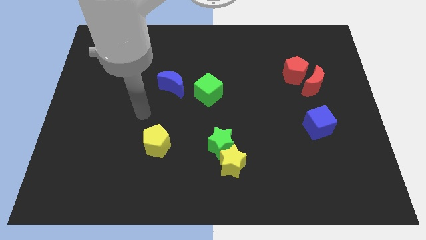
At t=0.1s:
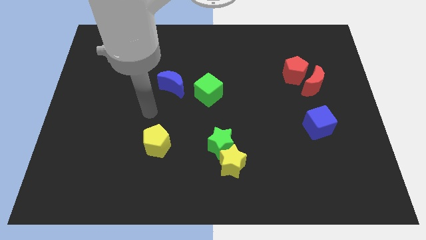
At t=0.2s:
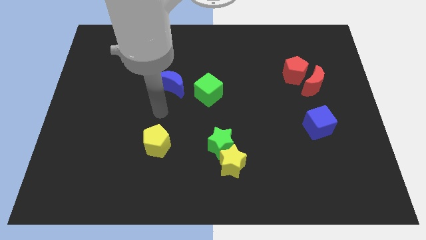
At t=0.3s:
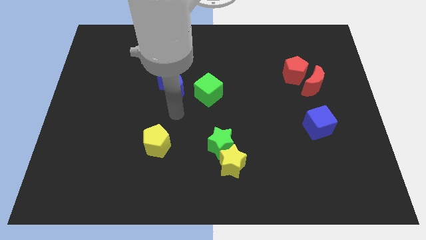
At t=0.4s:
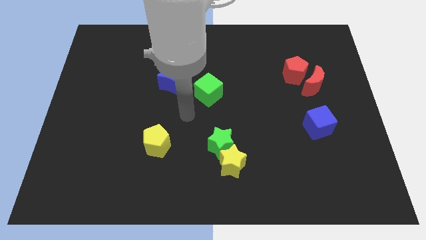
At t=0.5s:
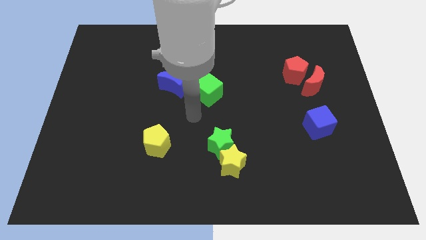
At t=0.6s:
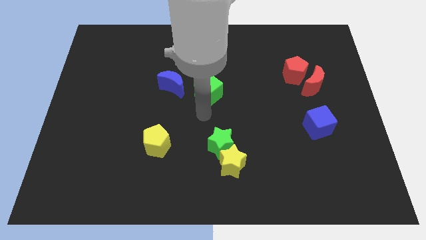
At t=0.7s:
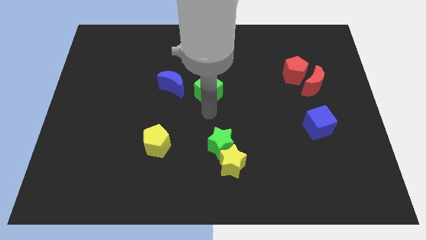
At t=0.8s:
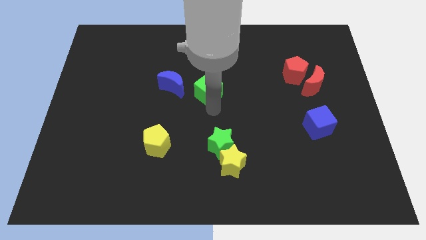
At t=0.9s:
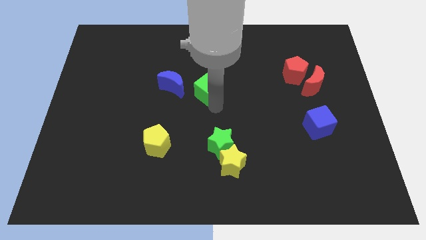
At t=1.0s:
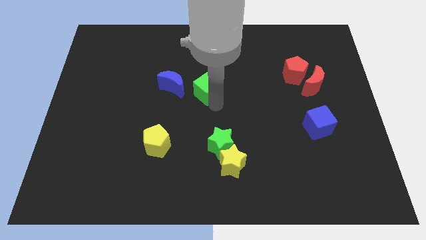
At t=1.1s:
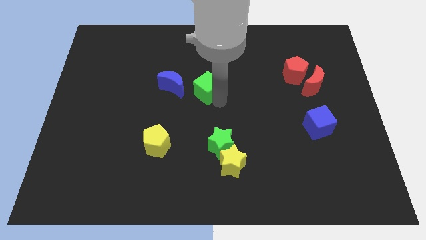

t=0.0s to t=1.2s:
move your arm to the bottom of the green cube

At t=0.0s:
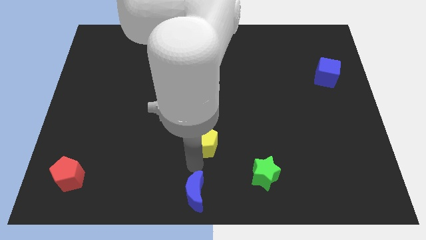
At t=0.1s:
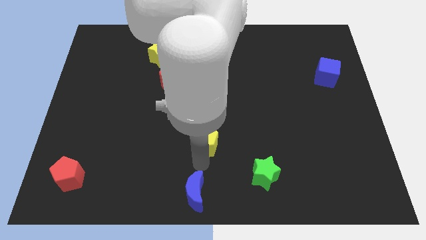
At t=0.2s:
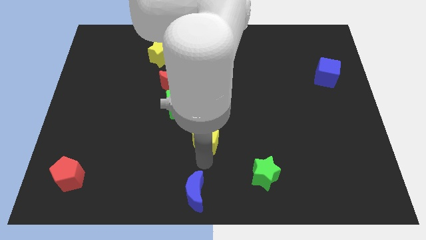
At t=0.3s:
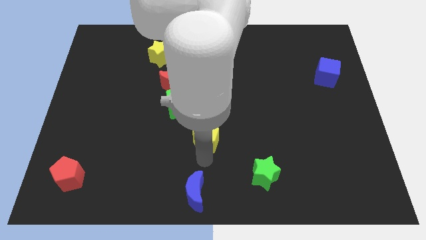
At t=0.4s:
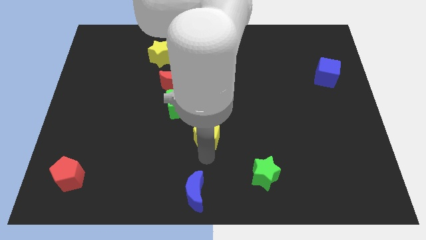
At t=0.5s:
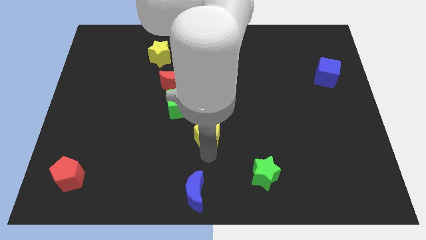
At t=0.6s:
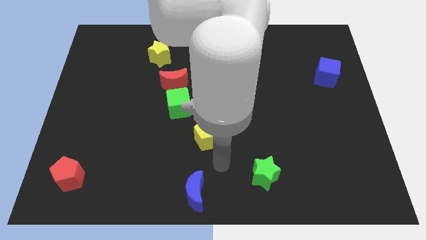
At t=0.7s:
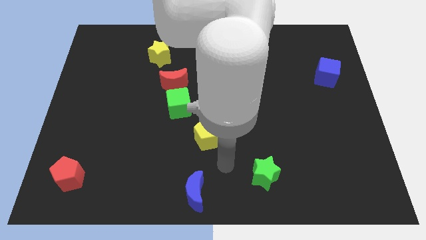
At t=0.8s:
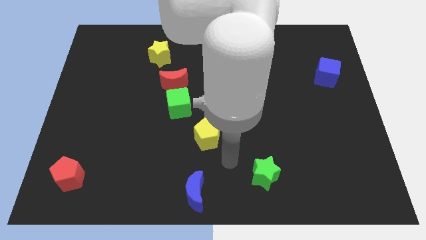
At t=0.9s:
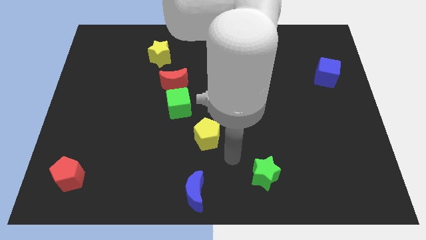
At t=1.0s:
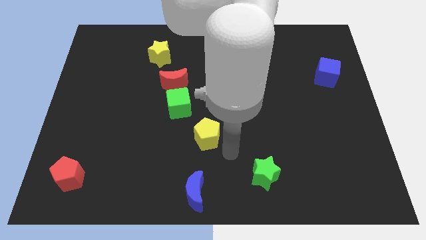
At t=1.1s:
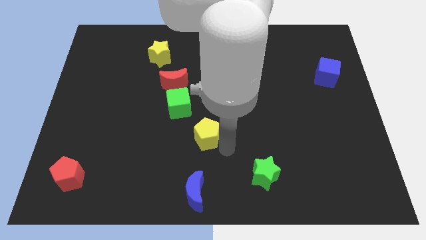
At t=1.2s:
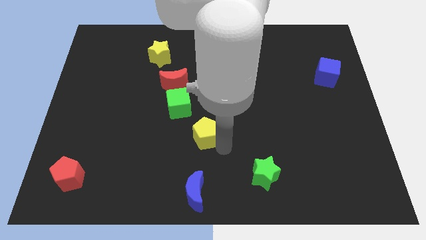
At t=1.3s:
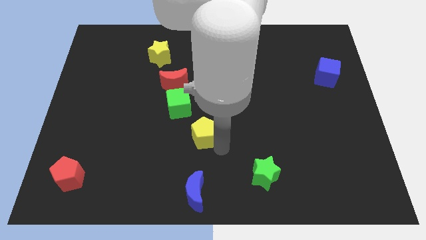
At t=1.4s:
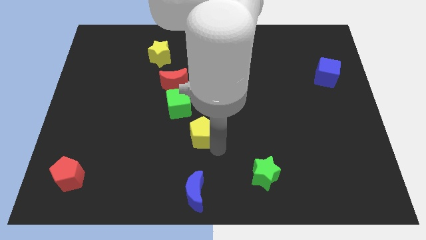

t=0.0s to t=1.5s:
move the yellow pentagon slightly to the bottom side of the green cube

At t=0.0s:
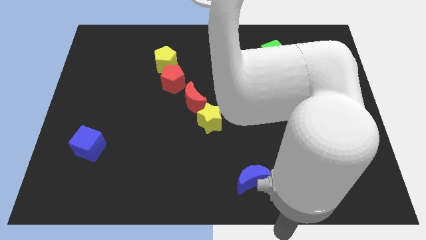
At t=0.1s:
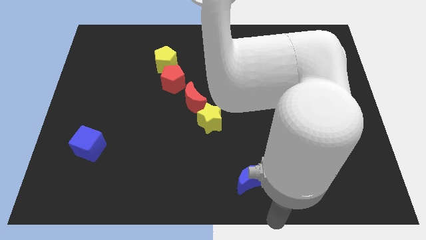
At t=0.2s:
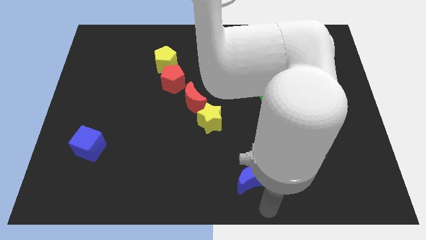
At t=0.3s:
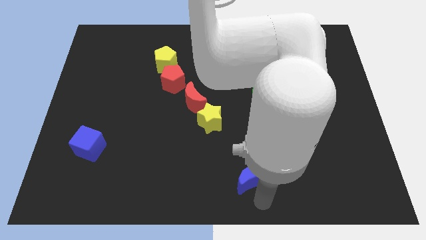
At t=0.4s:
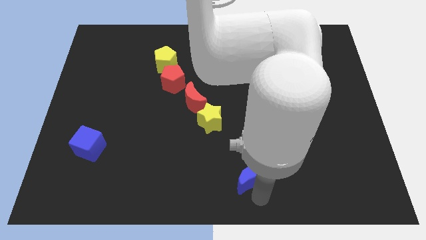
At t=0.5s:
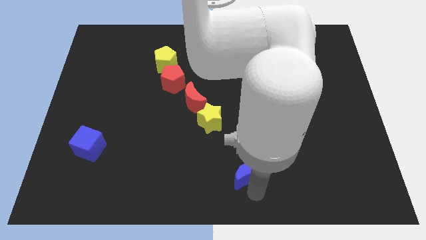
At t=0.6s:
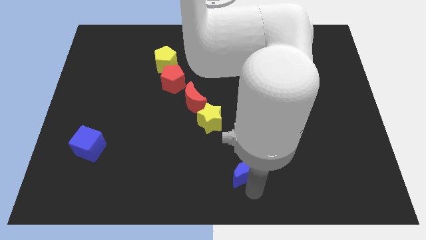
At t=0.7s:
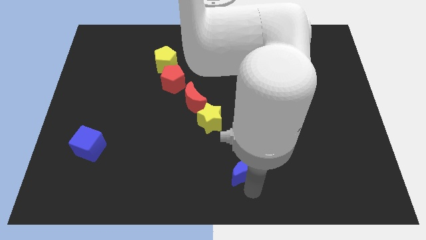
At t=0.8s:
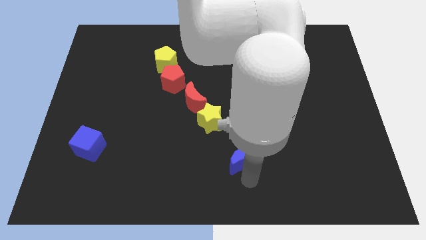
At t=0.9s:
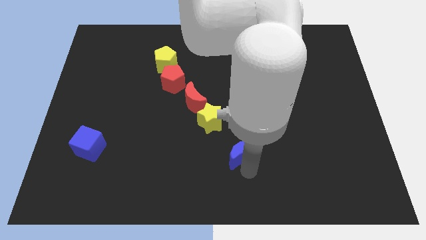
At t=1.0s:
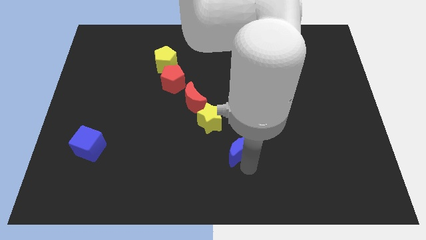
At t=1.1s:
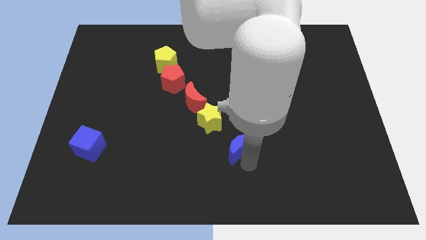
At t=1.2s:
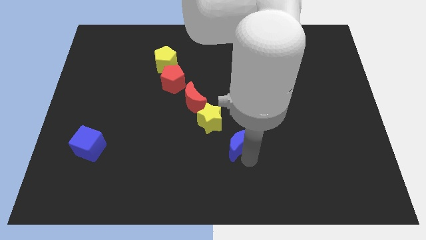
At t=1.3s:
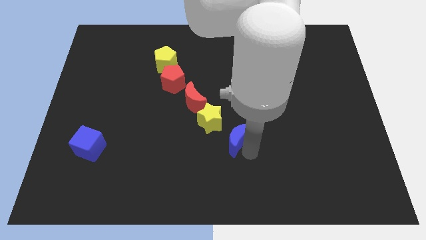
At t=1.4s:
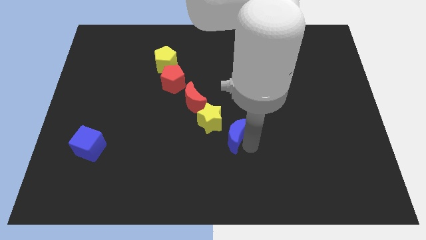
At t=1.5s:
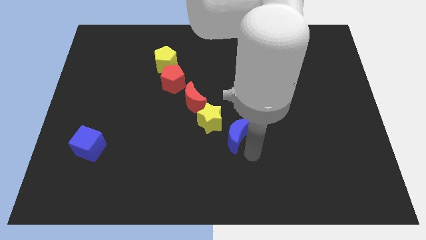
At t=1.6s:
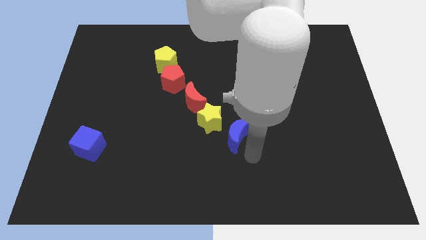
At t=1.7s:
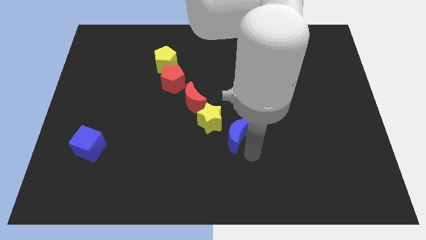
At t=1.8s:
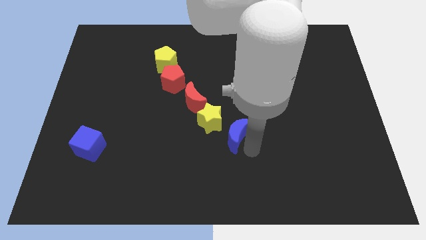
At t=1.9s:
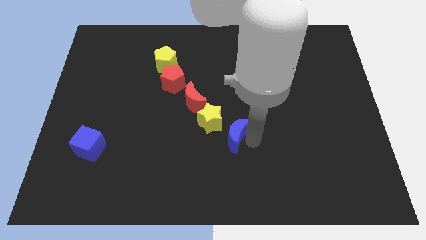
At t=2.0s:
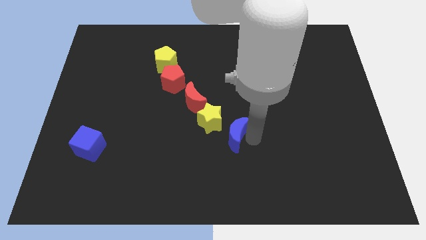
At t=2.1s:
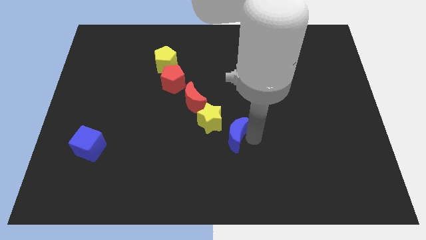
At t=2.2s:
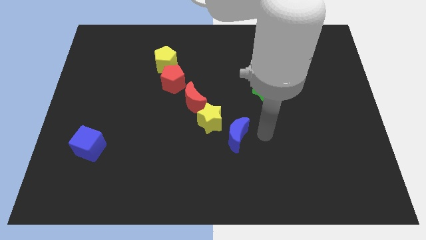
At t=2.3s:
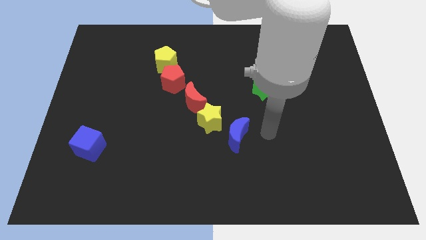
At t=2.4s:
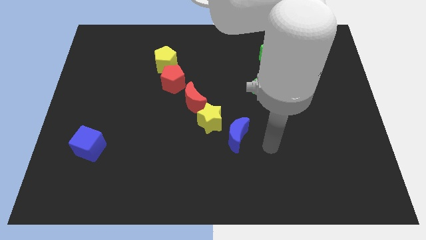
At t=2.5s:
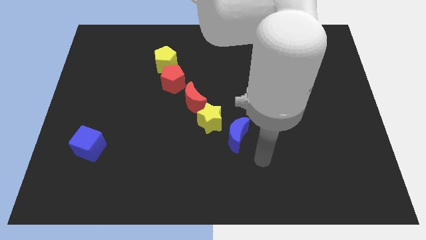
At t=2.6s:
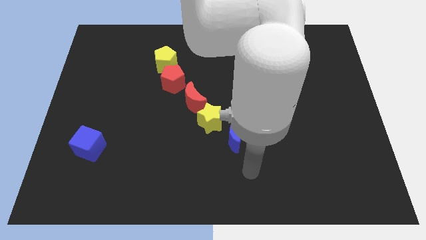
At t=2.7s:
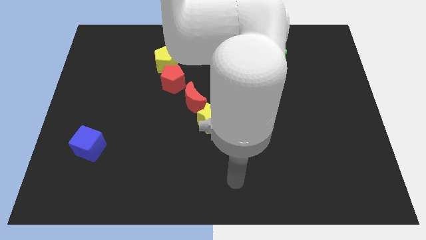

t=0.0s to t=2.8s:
place the blue moon to the bottom right of the yellow star

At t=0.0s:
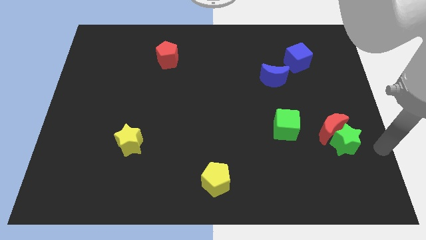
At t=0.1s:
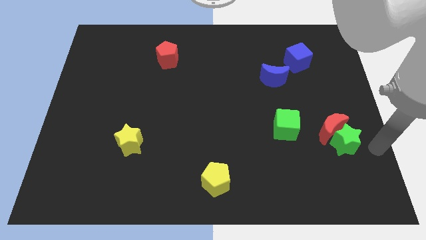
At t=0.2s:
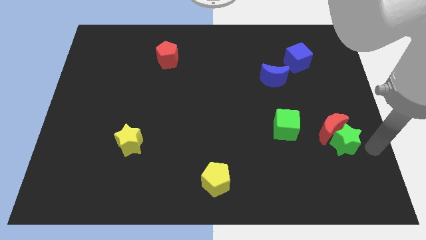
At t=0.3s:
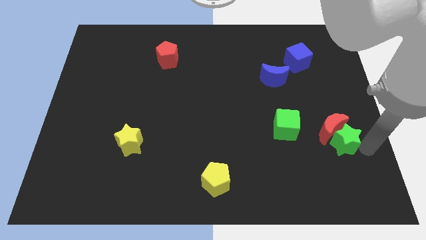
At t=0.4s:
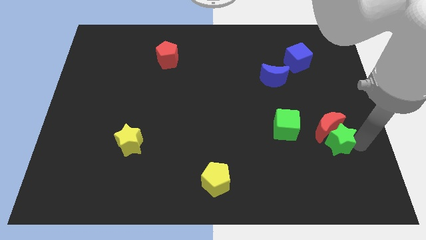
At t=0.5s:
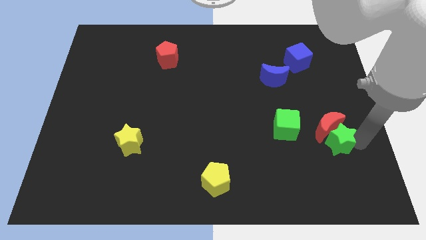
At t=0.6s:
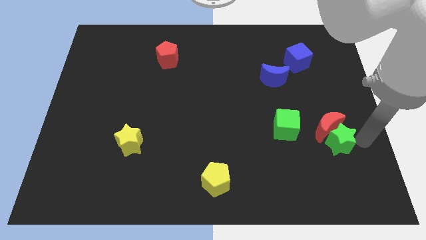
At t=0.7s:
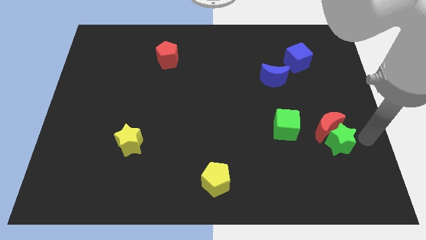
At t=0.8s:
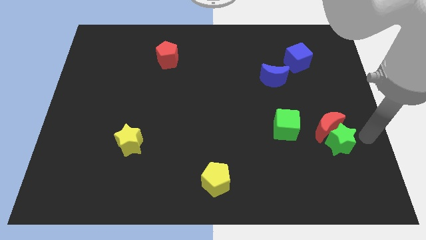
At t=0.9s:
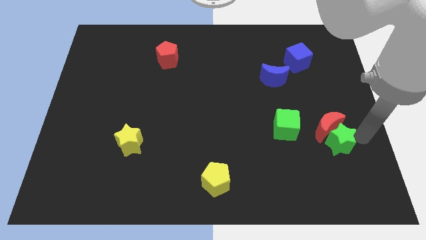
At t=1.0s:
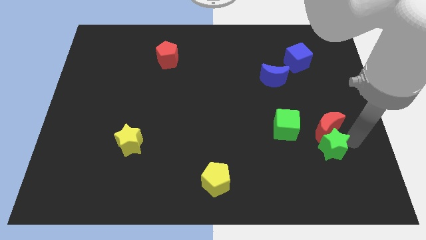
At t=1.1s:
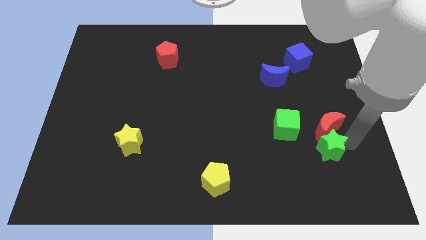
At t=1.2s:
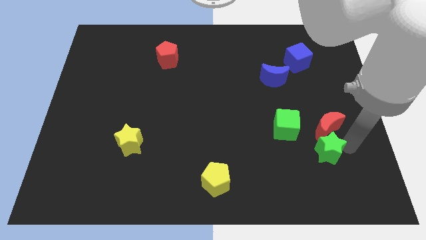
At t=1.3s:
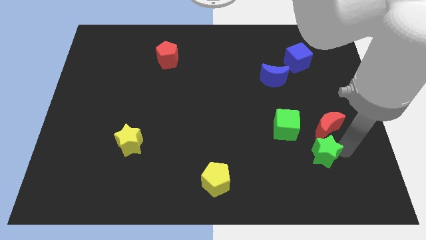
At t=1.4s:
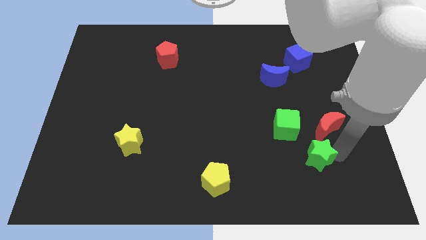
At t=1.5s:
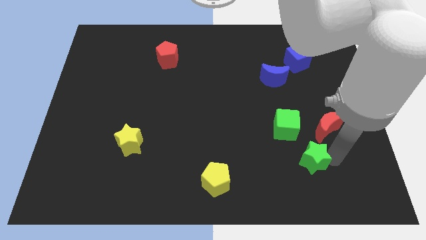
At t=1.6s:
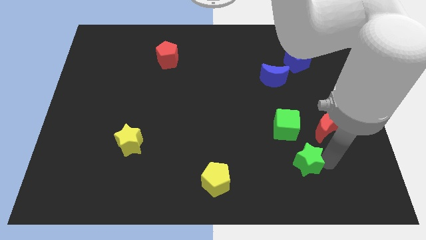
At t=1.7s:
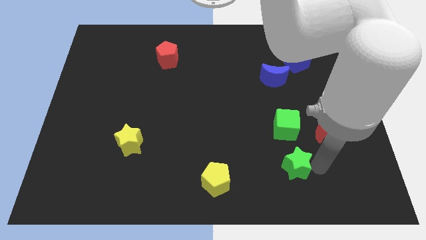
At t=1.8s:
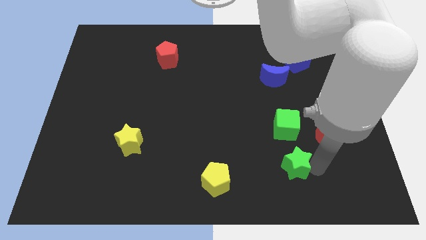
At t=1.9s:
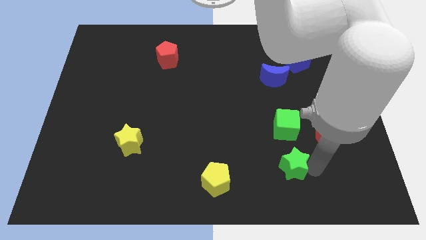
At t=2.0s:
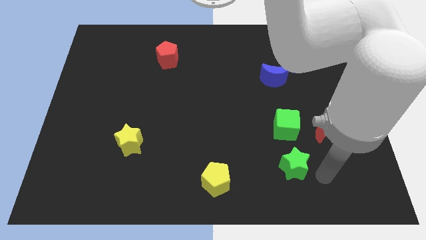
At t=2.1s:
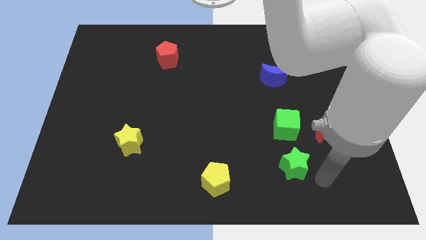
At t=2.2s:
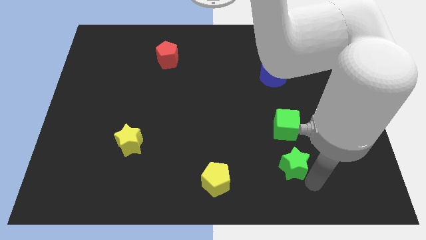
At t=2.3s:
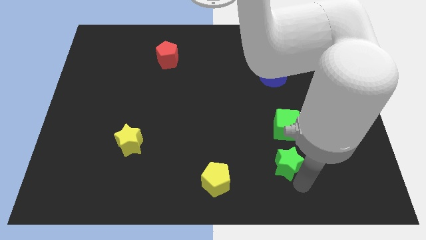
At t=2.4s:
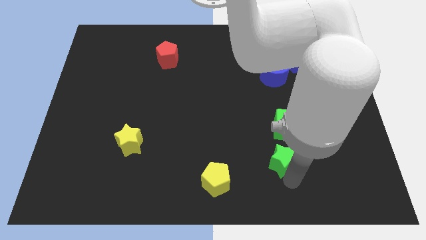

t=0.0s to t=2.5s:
push the green star to the bottom of green cube

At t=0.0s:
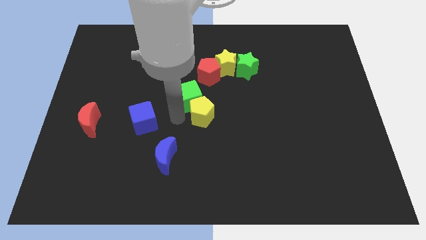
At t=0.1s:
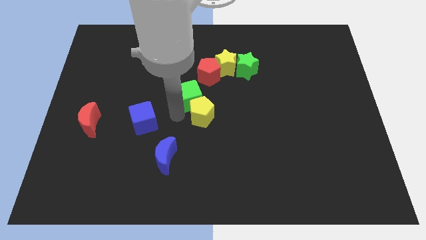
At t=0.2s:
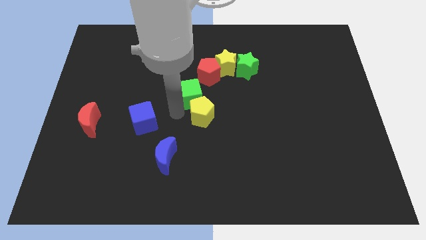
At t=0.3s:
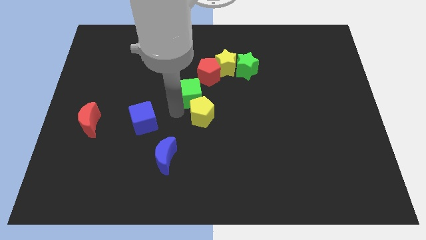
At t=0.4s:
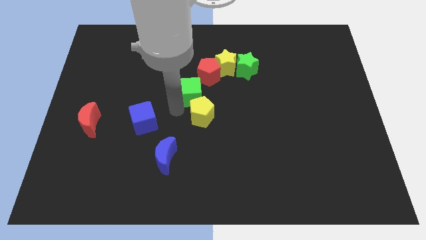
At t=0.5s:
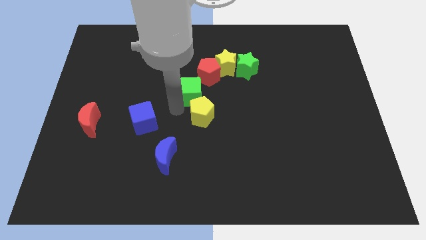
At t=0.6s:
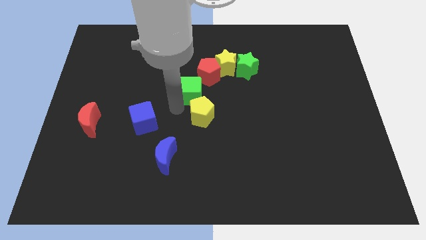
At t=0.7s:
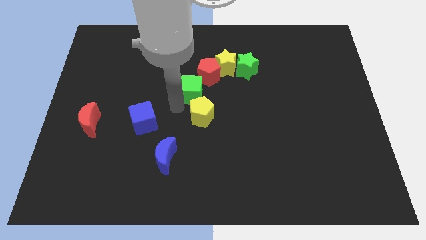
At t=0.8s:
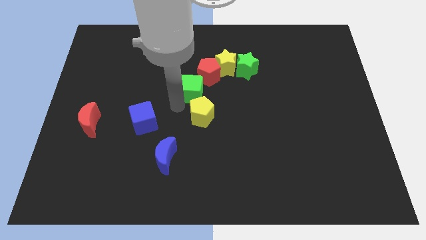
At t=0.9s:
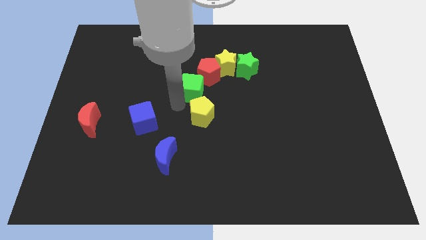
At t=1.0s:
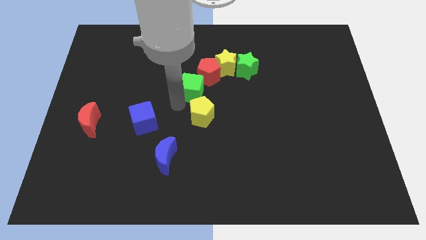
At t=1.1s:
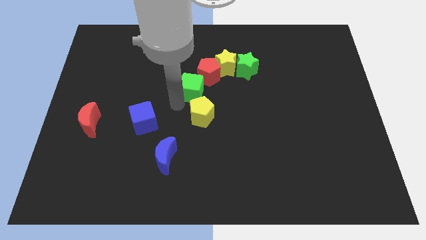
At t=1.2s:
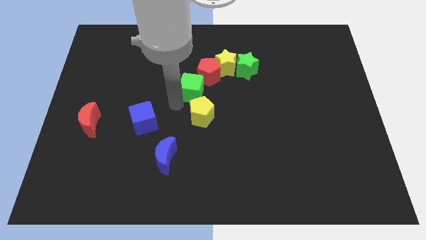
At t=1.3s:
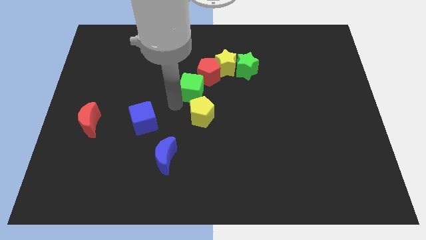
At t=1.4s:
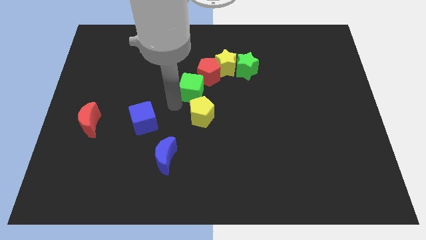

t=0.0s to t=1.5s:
move the green cube to the bottom left of the red pentagon
